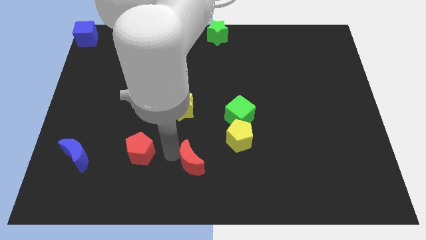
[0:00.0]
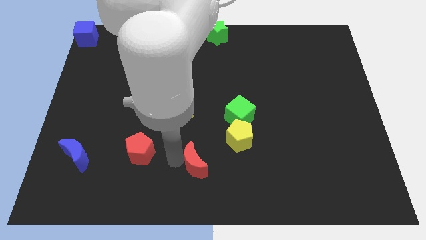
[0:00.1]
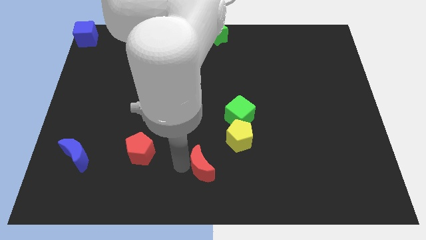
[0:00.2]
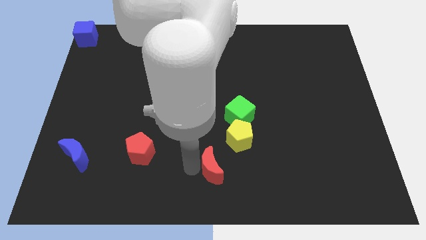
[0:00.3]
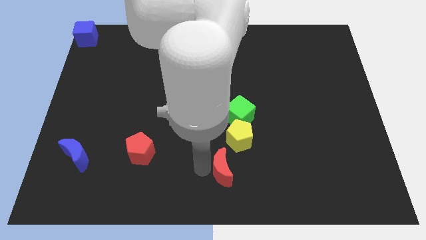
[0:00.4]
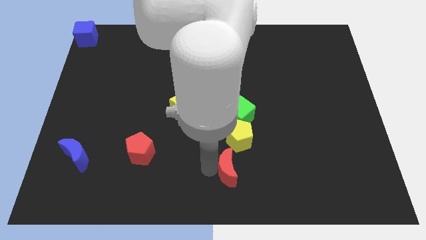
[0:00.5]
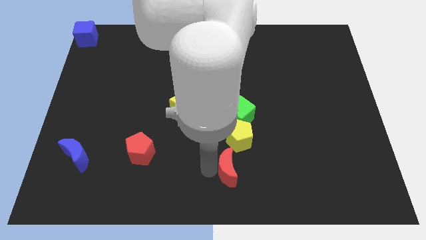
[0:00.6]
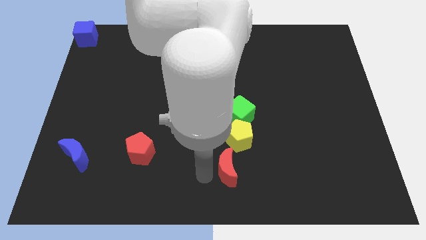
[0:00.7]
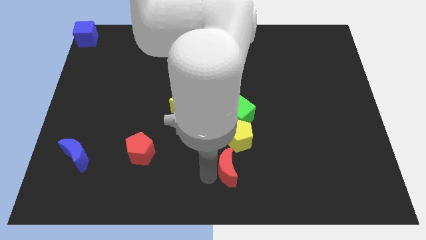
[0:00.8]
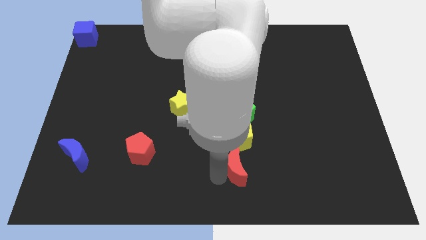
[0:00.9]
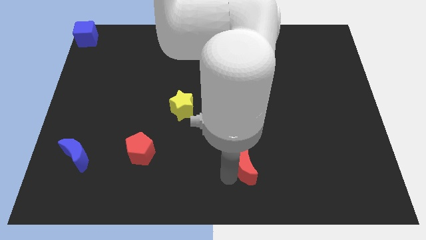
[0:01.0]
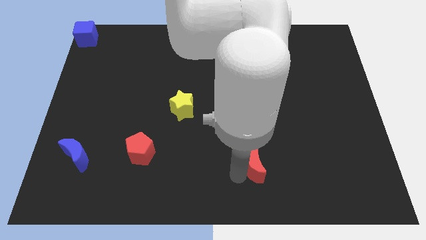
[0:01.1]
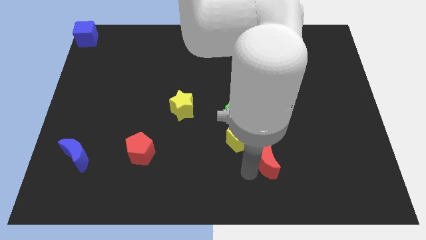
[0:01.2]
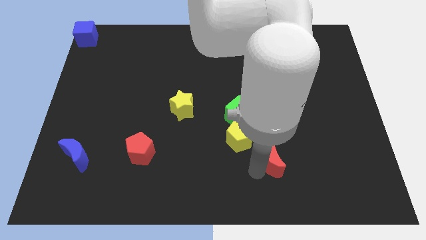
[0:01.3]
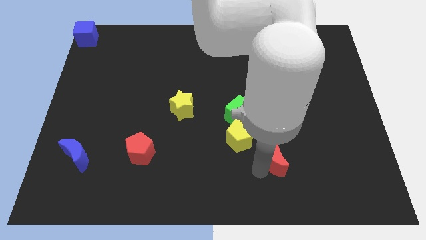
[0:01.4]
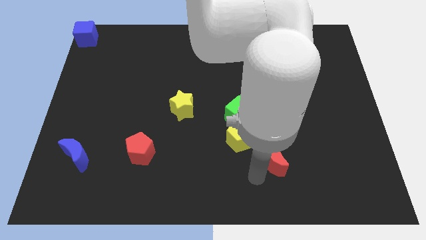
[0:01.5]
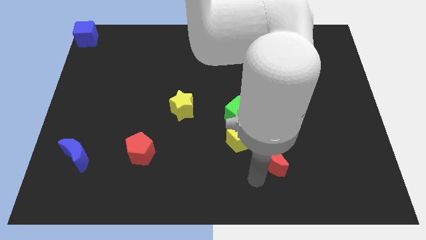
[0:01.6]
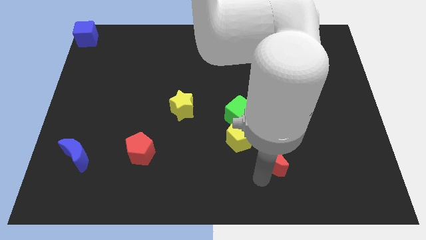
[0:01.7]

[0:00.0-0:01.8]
push the red crescent to the bottom of the yellow pentagon

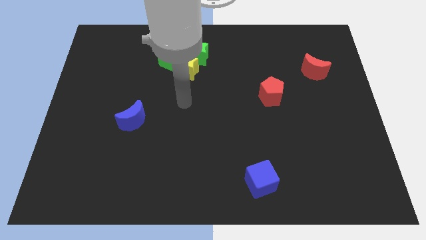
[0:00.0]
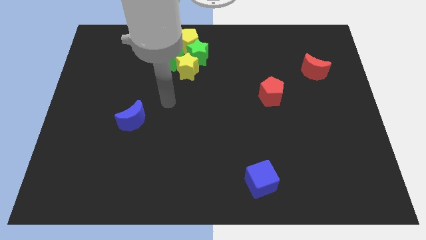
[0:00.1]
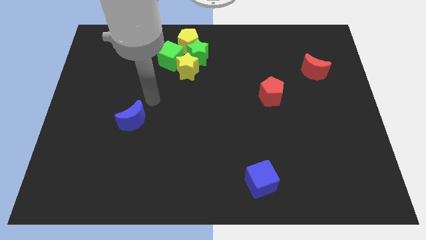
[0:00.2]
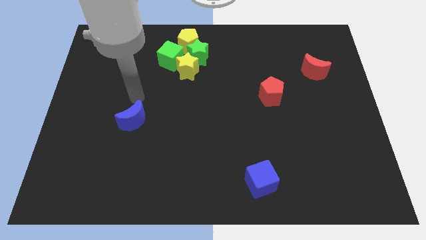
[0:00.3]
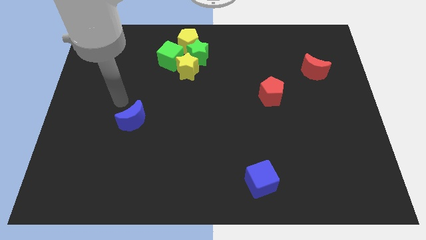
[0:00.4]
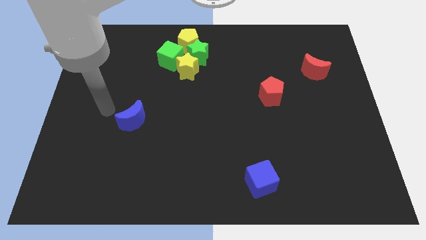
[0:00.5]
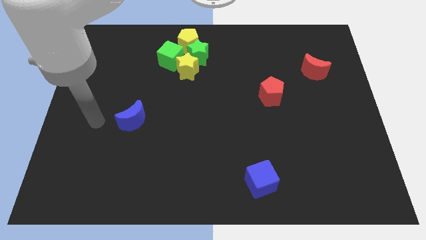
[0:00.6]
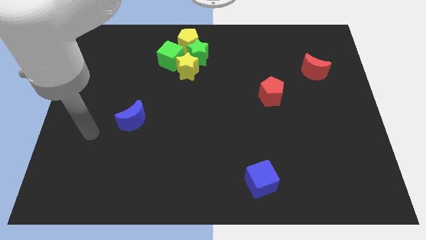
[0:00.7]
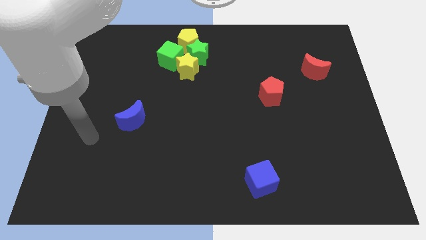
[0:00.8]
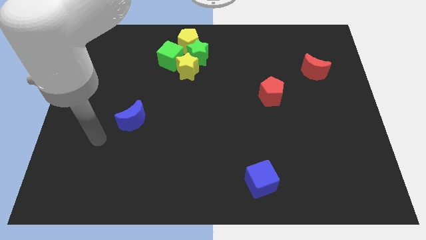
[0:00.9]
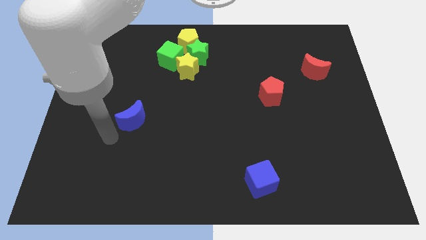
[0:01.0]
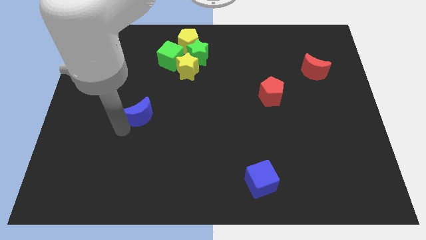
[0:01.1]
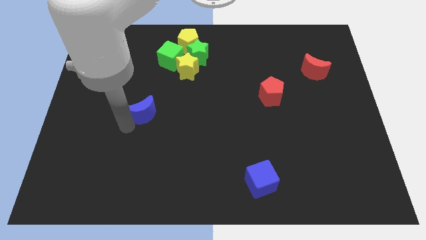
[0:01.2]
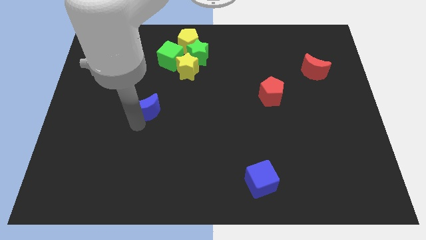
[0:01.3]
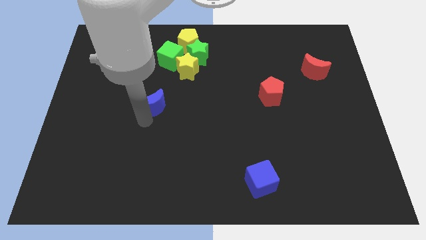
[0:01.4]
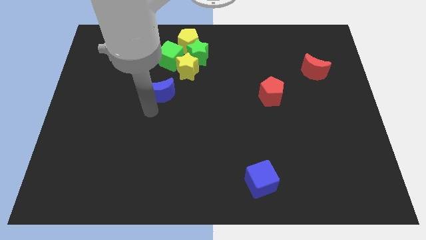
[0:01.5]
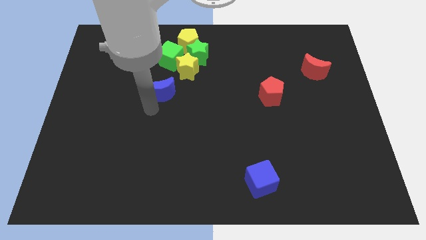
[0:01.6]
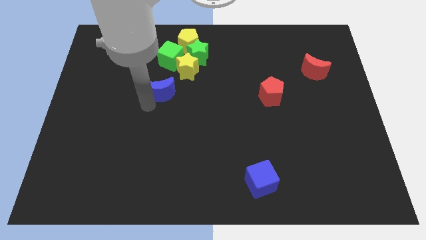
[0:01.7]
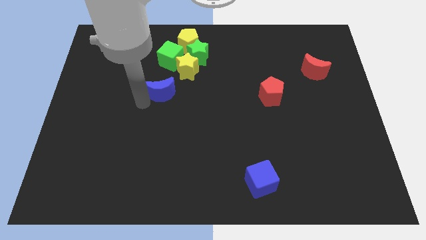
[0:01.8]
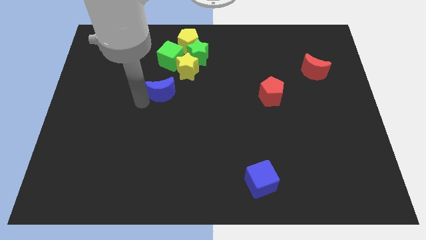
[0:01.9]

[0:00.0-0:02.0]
move blue moon upwards

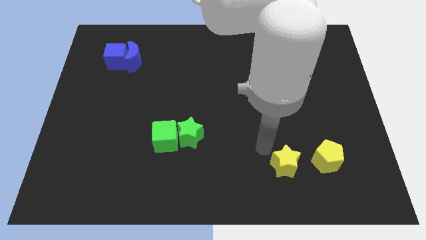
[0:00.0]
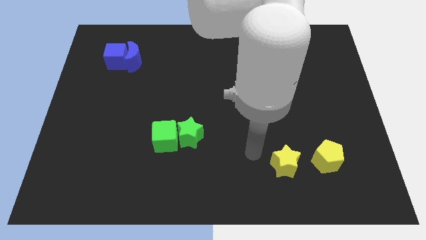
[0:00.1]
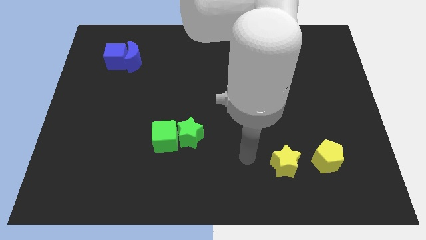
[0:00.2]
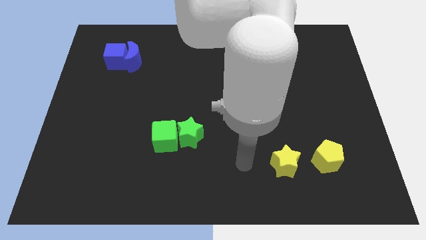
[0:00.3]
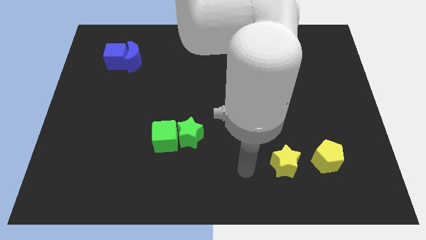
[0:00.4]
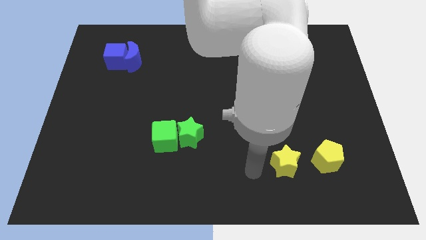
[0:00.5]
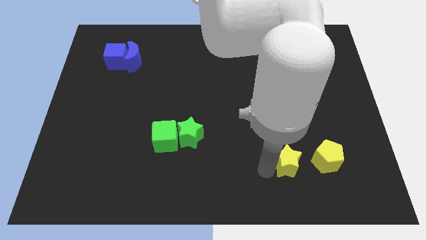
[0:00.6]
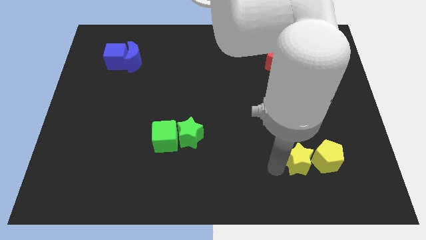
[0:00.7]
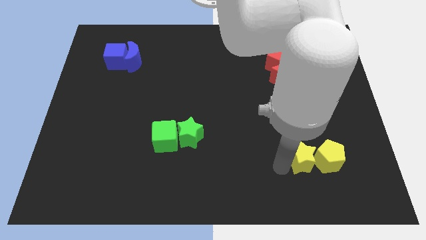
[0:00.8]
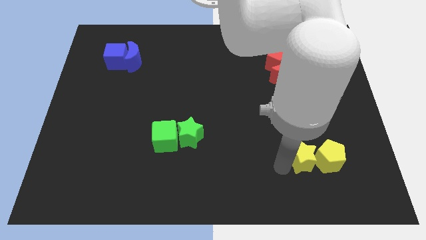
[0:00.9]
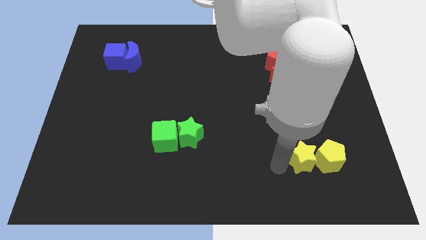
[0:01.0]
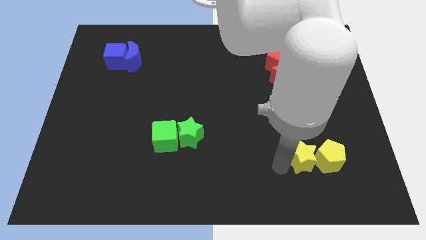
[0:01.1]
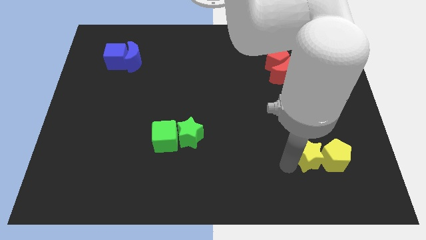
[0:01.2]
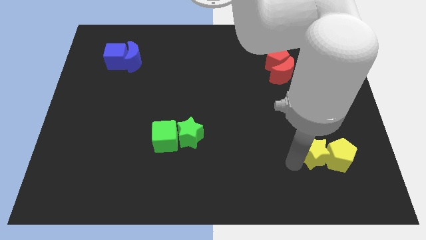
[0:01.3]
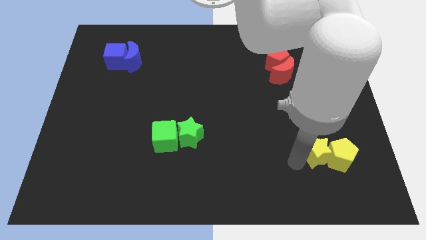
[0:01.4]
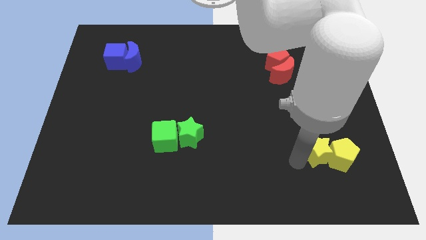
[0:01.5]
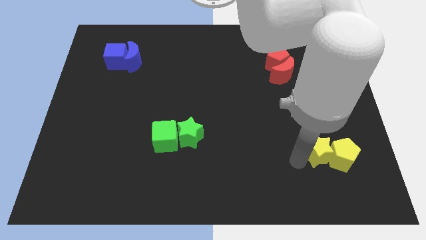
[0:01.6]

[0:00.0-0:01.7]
push yellow star into yellow pentagon

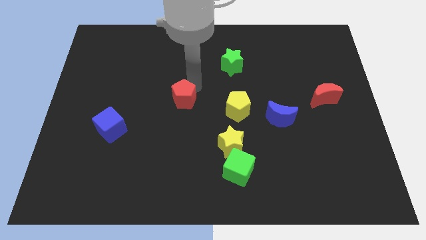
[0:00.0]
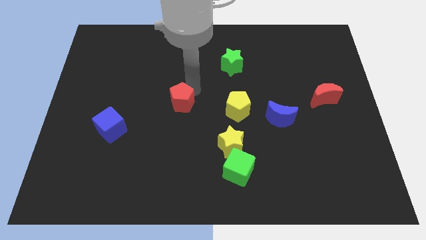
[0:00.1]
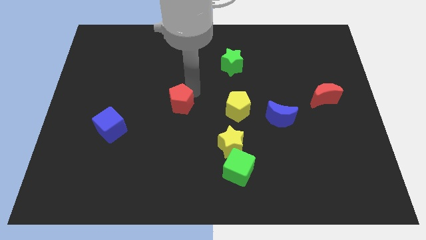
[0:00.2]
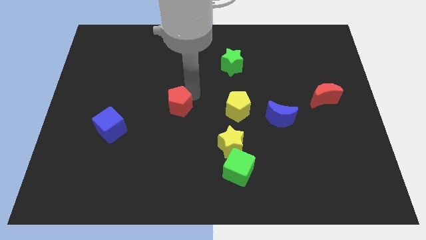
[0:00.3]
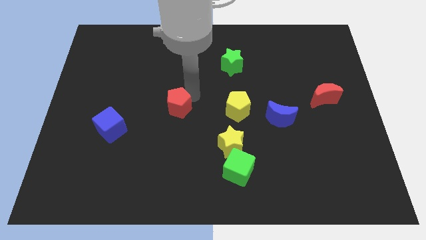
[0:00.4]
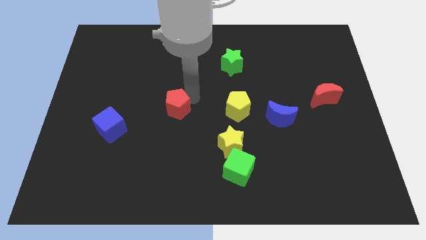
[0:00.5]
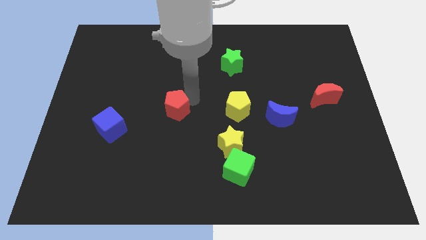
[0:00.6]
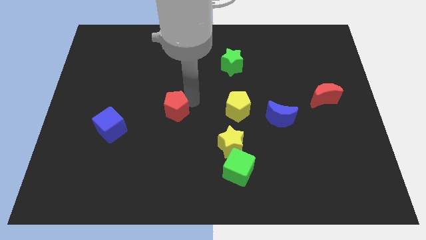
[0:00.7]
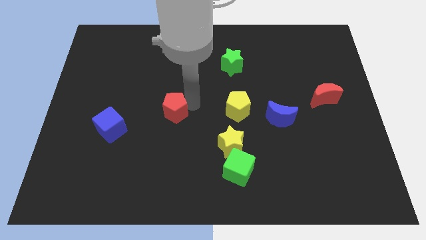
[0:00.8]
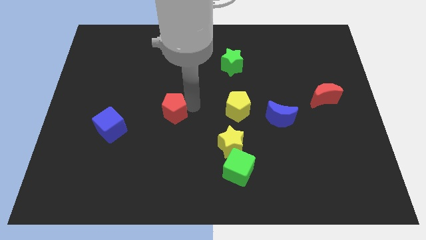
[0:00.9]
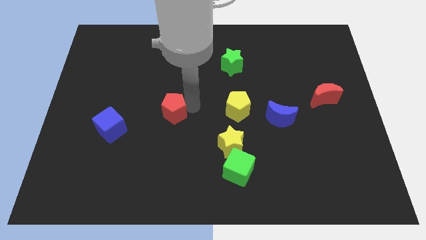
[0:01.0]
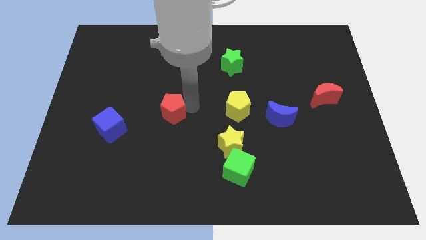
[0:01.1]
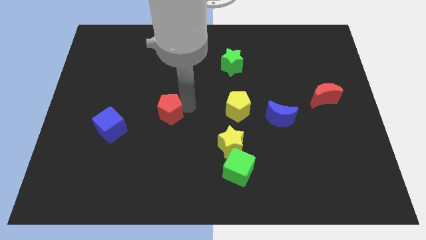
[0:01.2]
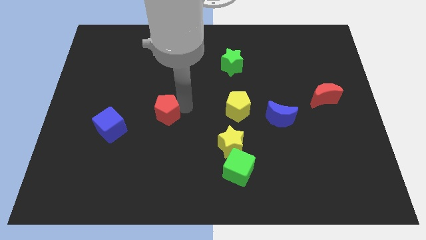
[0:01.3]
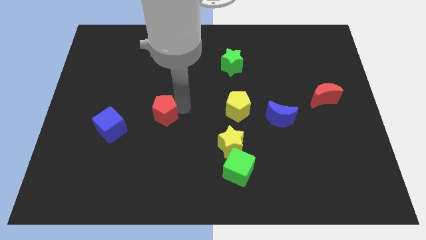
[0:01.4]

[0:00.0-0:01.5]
place the red pentagon horizontally left to the yellow pentagon

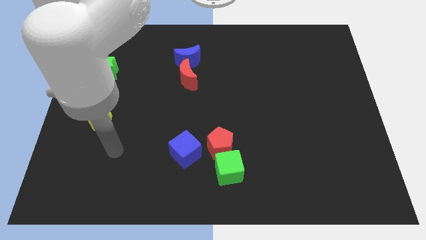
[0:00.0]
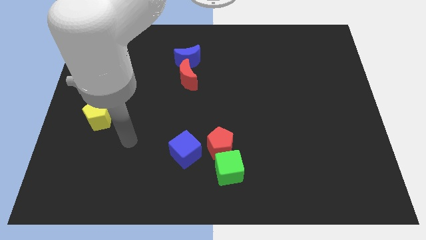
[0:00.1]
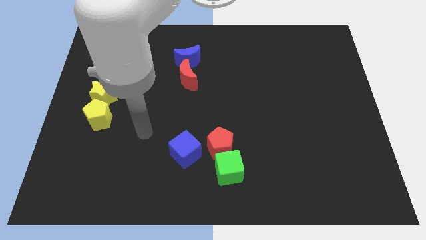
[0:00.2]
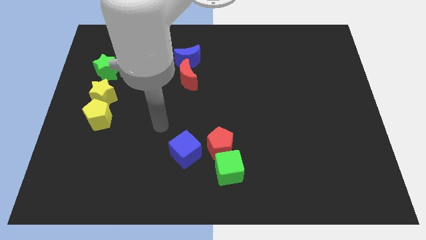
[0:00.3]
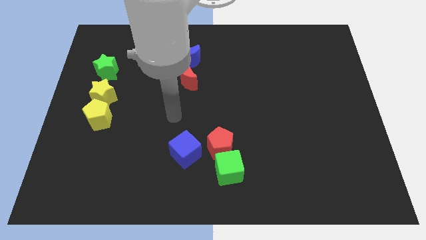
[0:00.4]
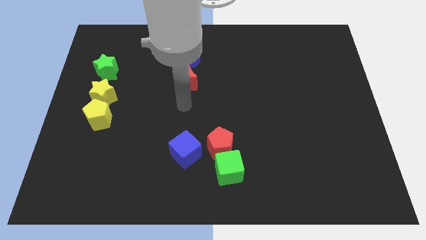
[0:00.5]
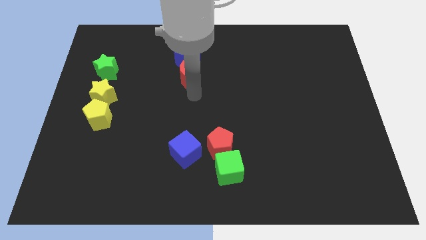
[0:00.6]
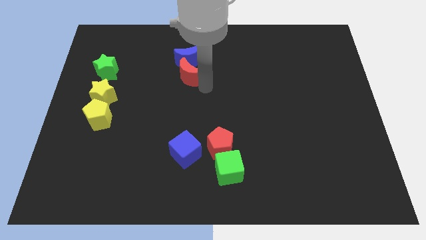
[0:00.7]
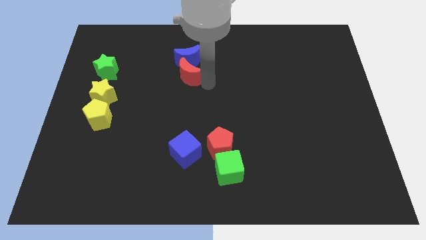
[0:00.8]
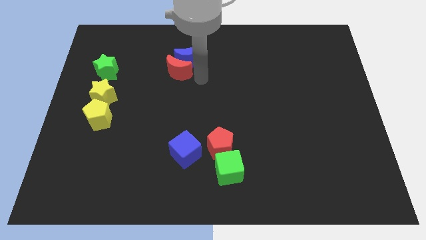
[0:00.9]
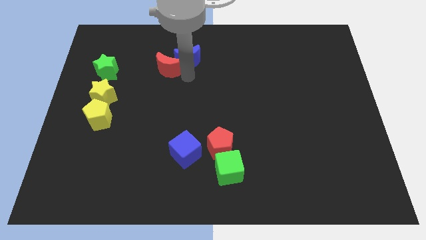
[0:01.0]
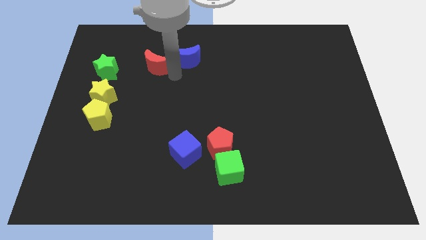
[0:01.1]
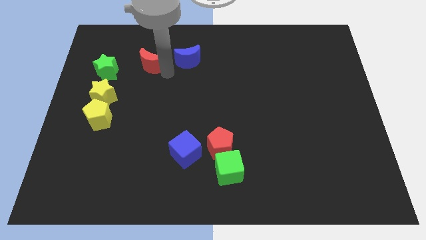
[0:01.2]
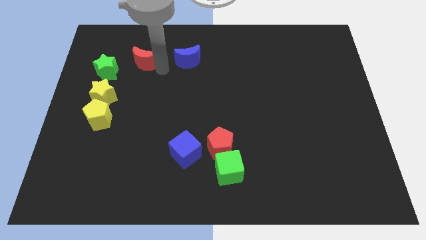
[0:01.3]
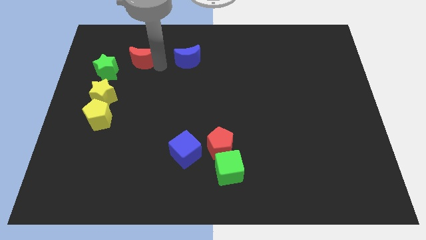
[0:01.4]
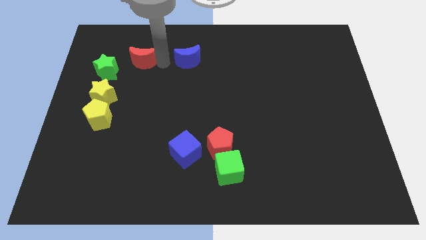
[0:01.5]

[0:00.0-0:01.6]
put the red crescent at the left side of the blue crescent
